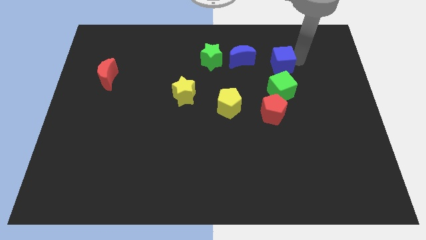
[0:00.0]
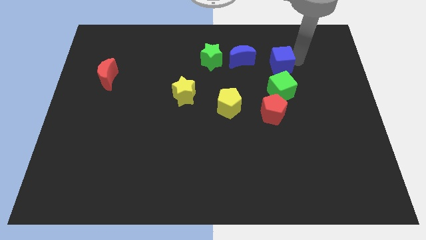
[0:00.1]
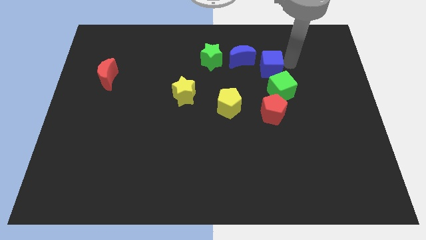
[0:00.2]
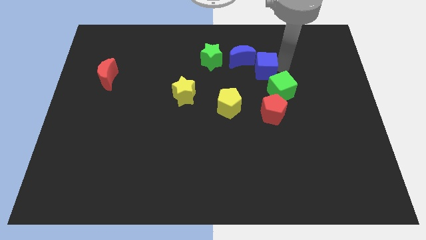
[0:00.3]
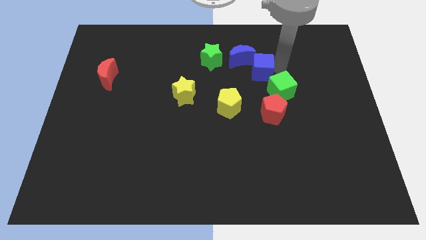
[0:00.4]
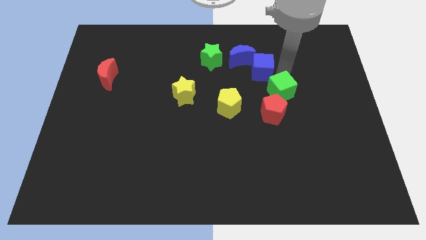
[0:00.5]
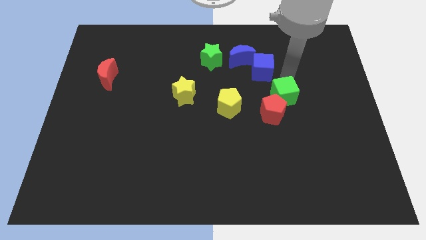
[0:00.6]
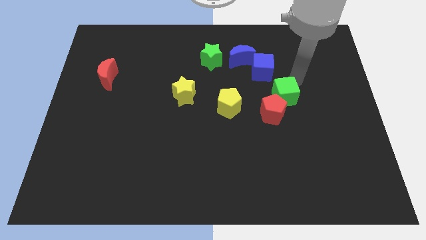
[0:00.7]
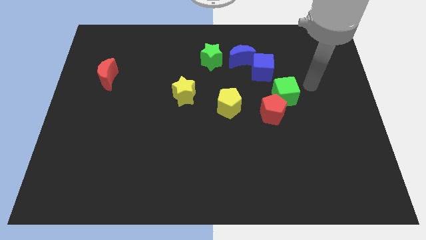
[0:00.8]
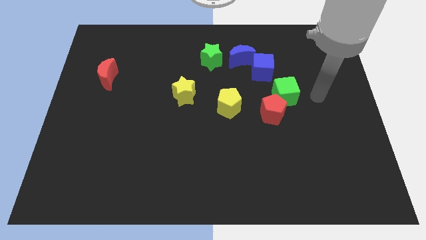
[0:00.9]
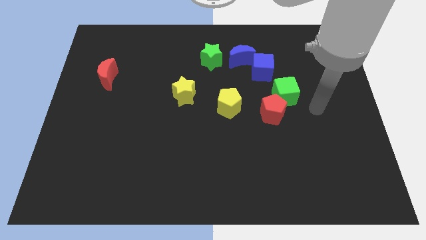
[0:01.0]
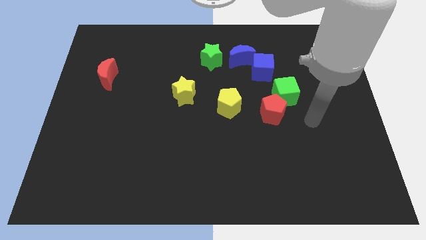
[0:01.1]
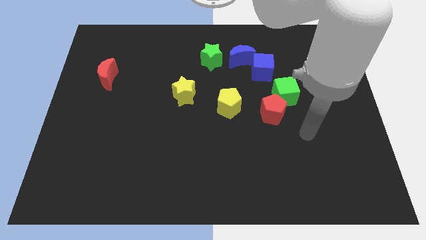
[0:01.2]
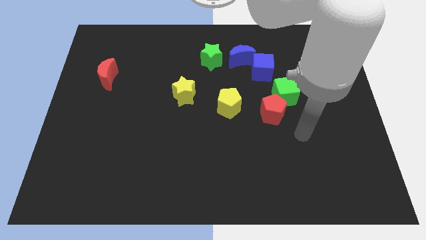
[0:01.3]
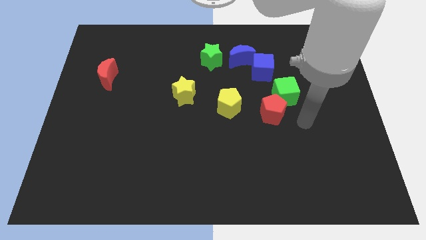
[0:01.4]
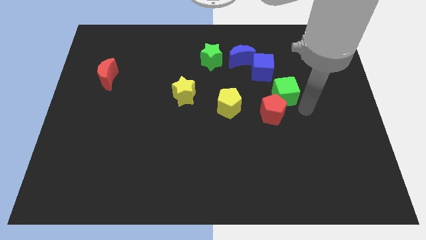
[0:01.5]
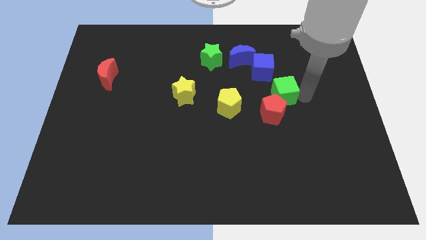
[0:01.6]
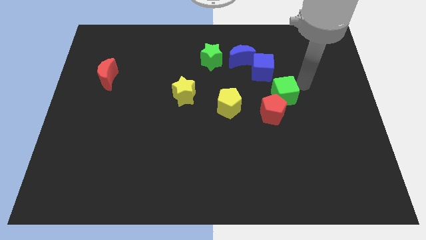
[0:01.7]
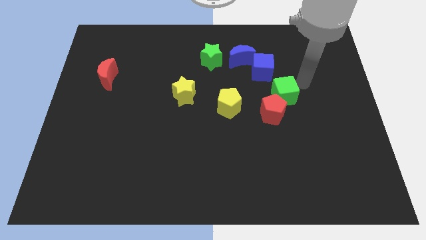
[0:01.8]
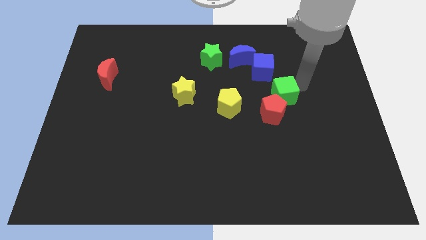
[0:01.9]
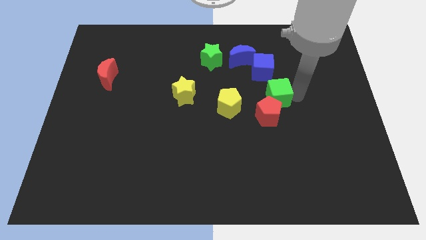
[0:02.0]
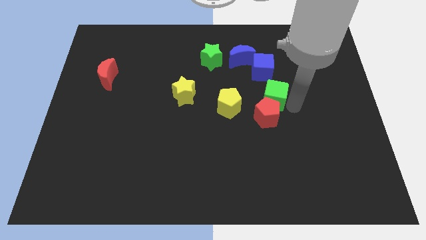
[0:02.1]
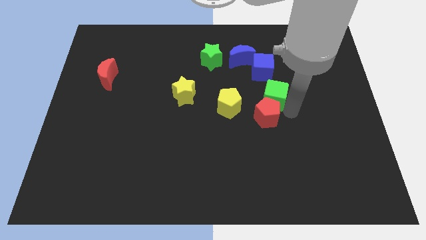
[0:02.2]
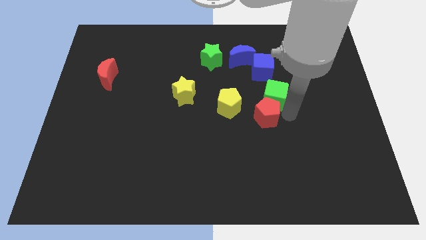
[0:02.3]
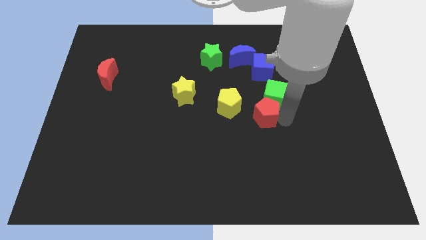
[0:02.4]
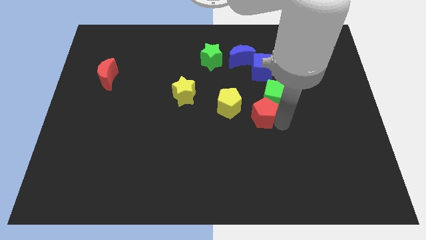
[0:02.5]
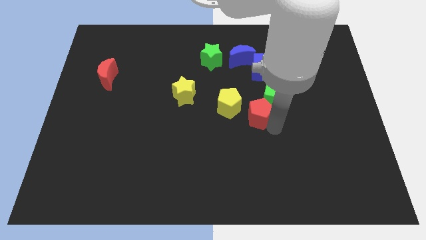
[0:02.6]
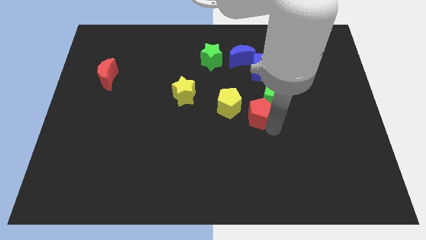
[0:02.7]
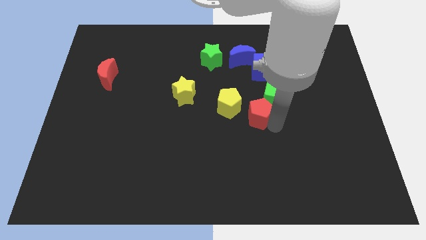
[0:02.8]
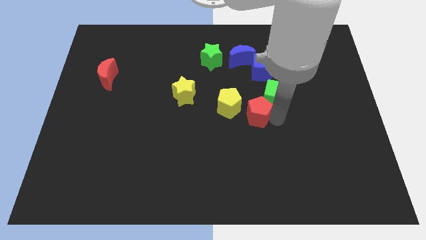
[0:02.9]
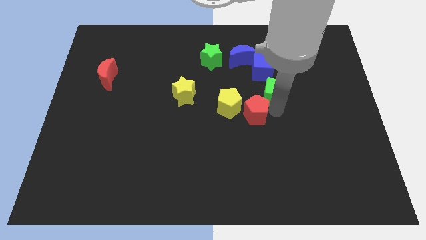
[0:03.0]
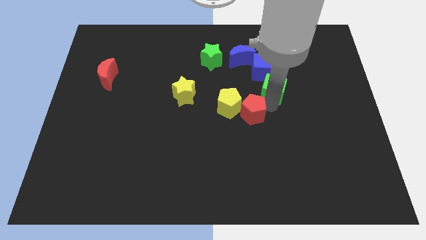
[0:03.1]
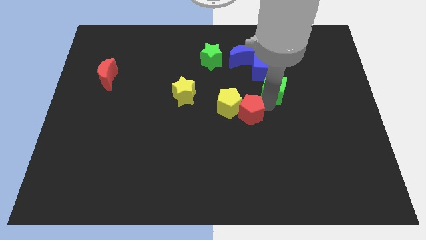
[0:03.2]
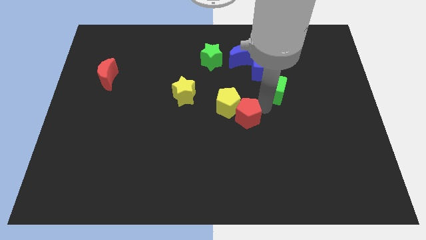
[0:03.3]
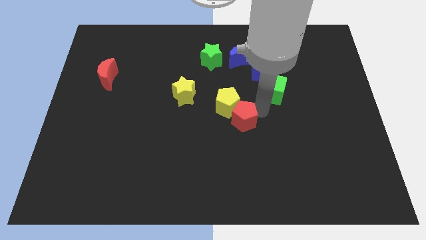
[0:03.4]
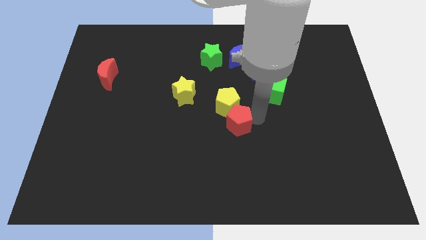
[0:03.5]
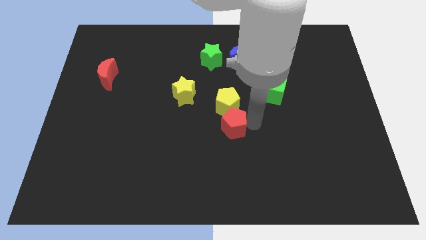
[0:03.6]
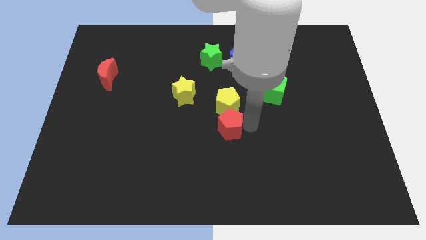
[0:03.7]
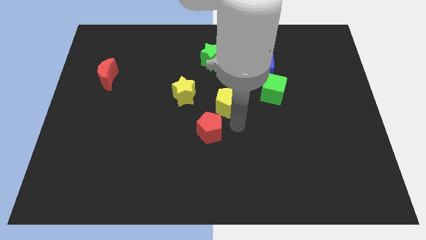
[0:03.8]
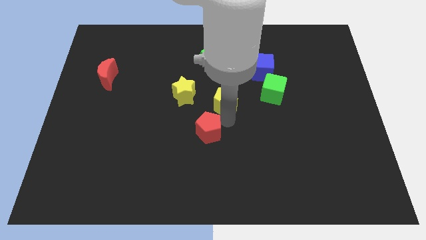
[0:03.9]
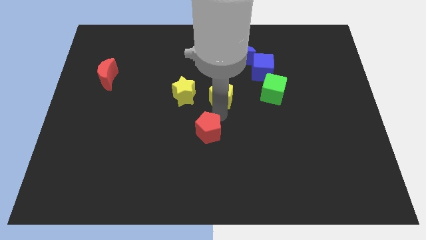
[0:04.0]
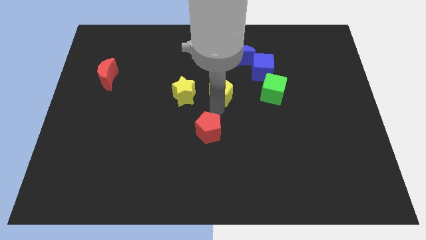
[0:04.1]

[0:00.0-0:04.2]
push the red pentagon and green cube to the left side slightly

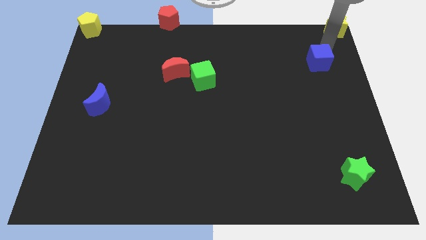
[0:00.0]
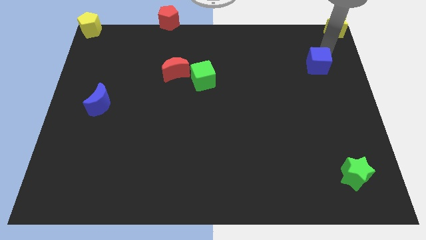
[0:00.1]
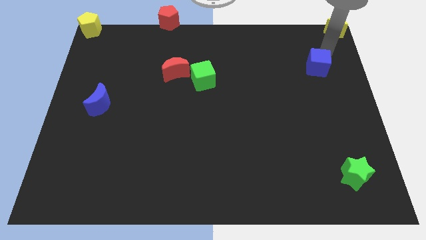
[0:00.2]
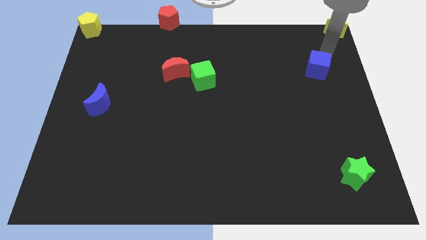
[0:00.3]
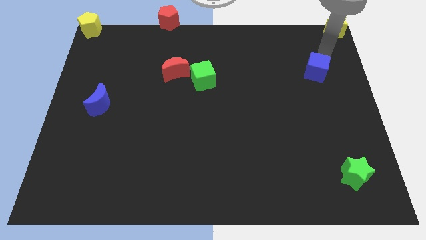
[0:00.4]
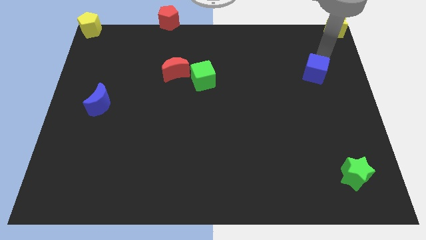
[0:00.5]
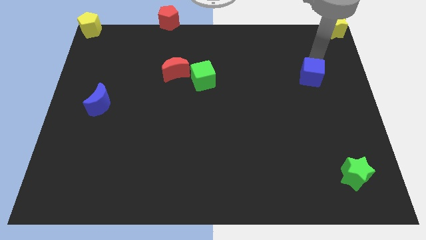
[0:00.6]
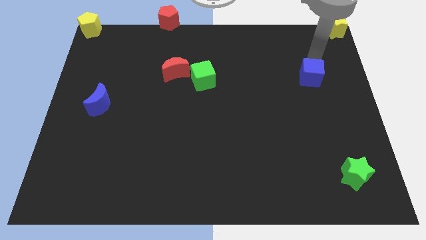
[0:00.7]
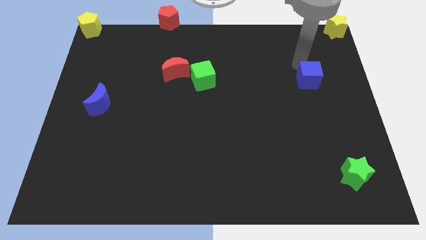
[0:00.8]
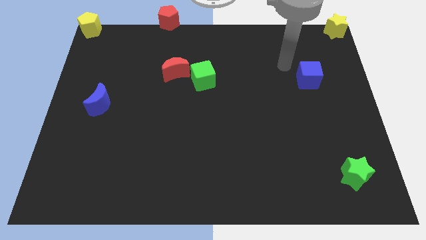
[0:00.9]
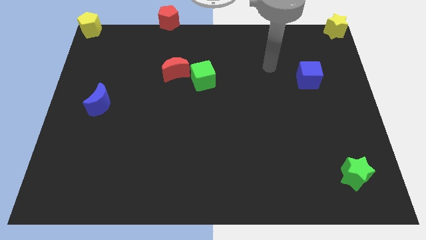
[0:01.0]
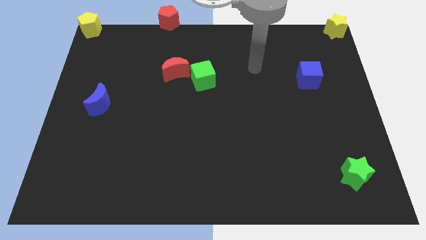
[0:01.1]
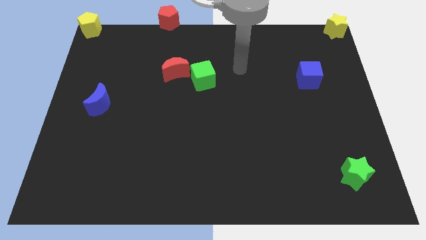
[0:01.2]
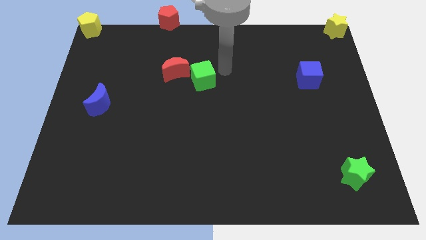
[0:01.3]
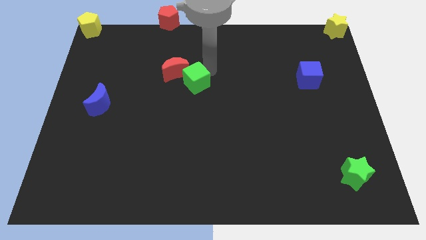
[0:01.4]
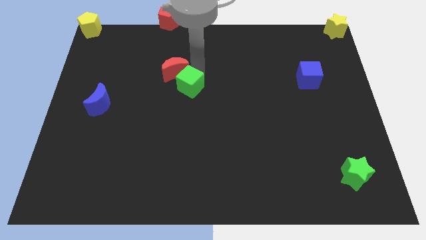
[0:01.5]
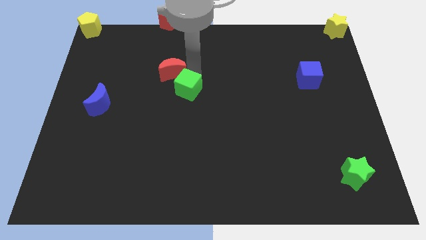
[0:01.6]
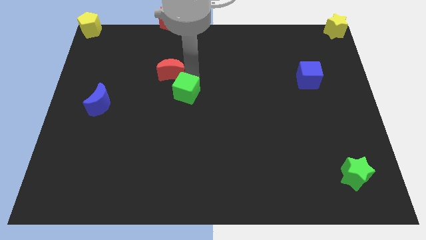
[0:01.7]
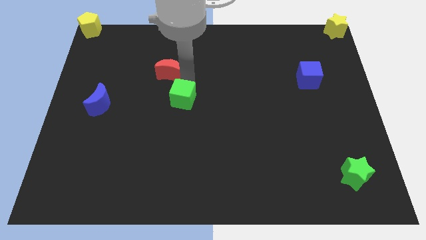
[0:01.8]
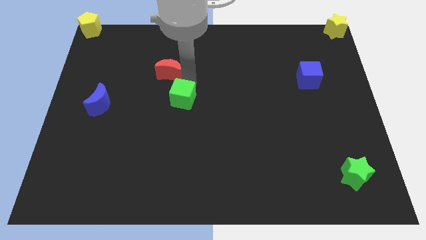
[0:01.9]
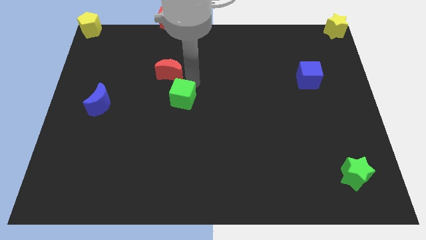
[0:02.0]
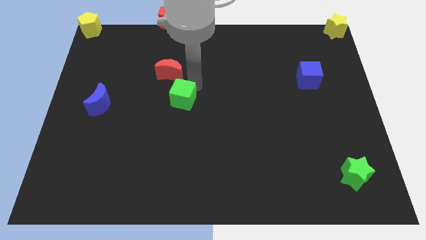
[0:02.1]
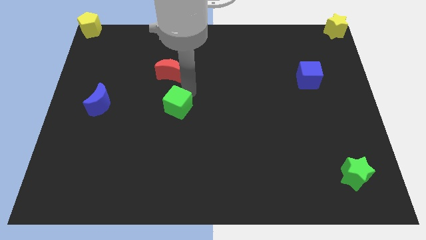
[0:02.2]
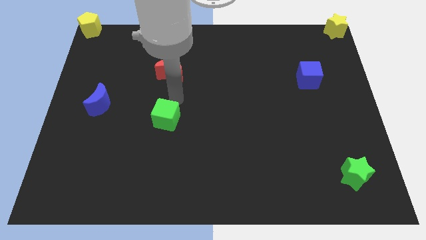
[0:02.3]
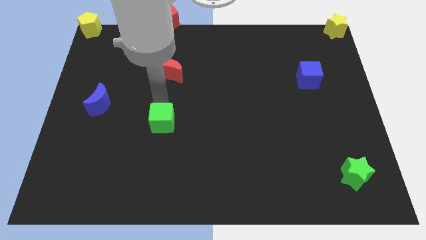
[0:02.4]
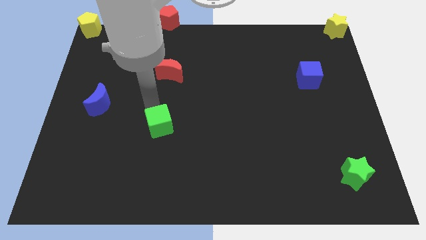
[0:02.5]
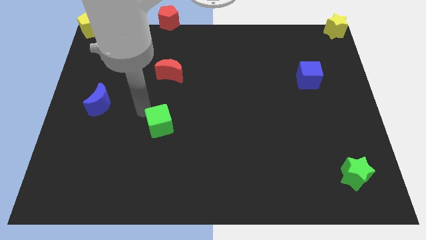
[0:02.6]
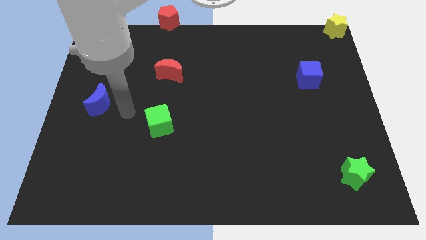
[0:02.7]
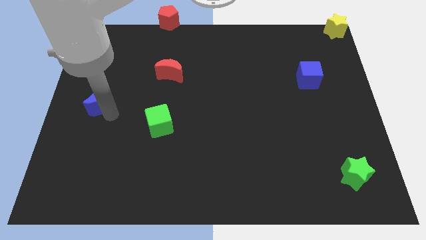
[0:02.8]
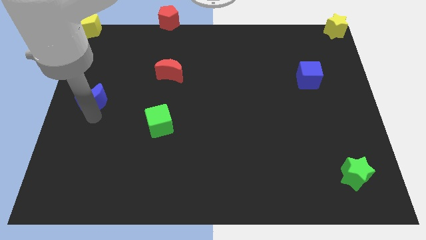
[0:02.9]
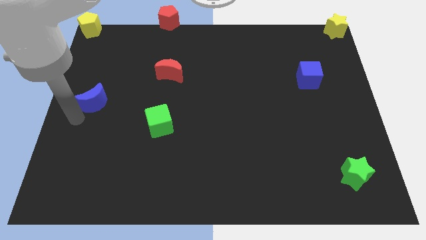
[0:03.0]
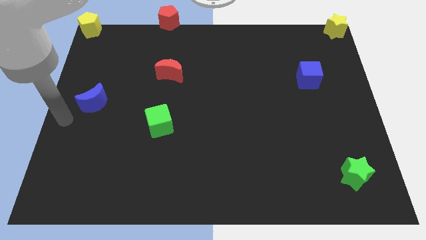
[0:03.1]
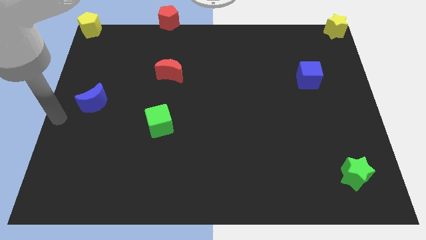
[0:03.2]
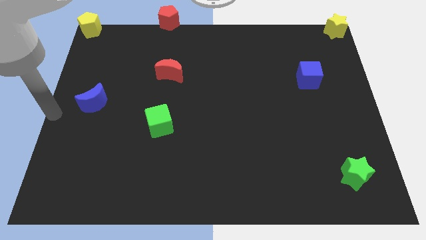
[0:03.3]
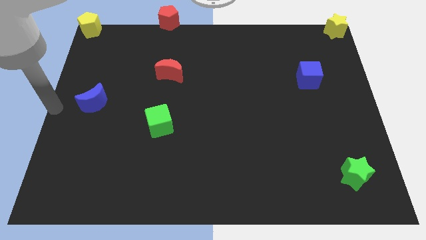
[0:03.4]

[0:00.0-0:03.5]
move your arm from yellow star to blue moon

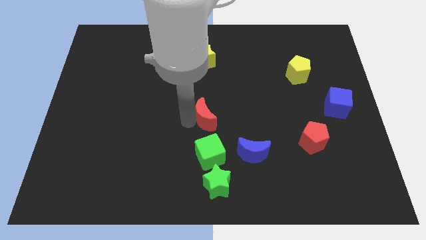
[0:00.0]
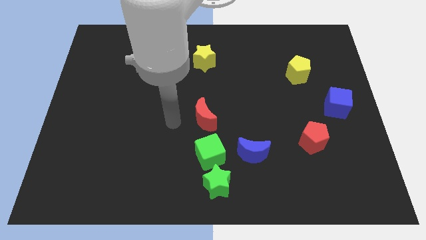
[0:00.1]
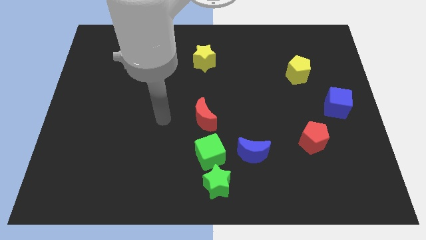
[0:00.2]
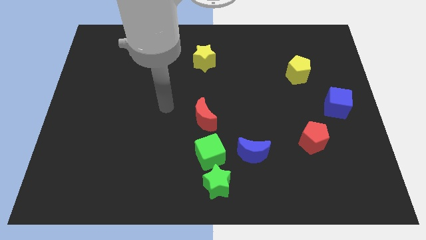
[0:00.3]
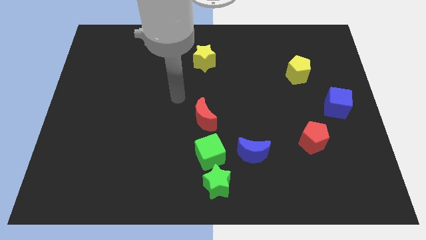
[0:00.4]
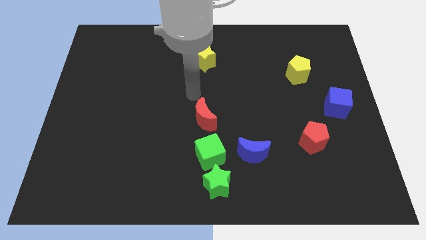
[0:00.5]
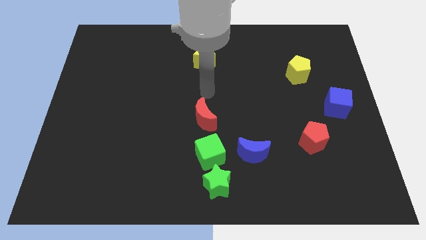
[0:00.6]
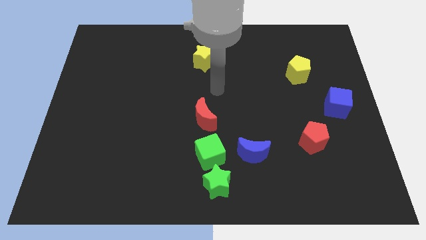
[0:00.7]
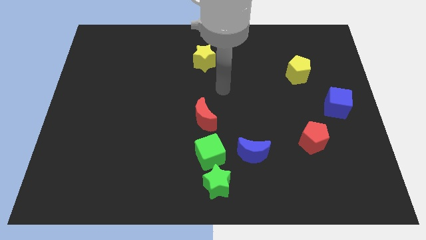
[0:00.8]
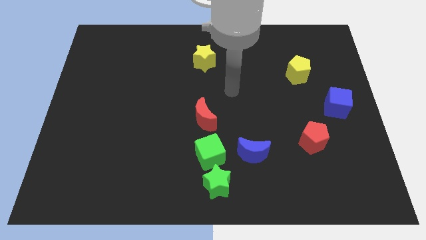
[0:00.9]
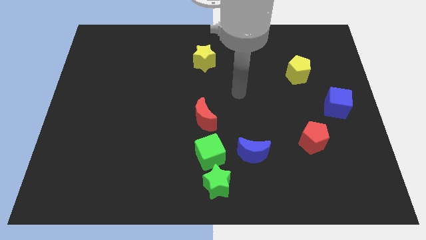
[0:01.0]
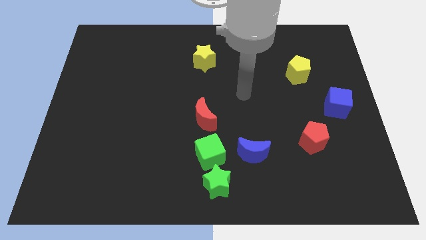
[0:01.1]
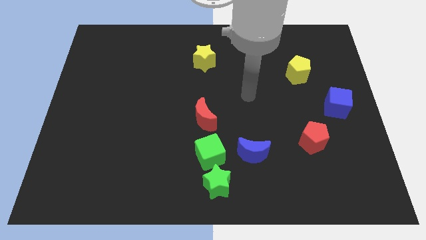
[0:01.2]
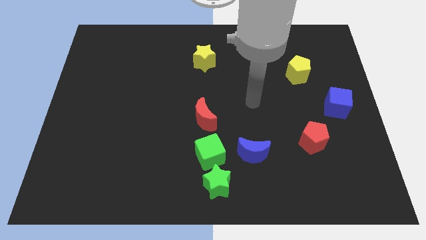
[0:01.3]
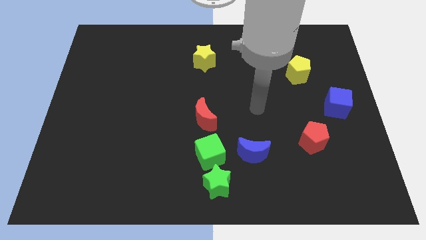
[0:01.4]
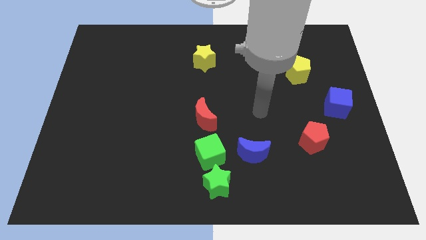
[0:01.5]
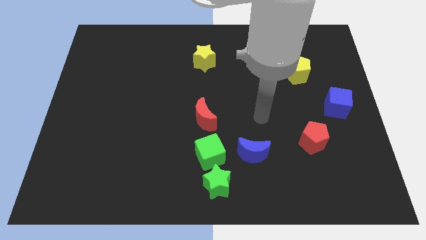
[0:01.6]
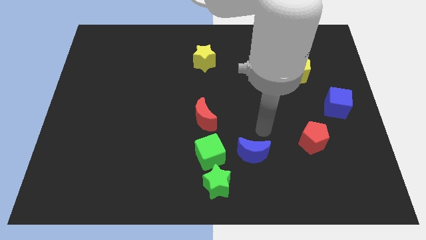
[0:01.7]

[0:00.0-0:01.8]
place the arm above the blue crescent
